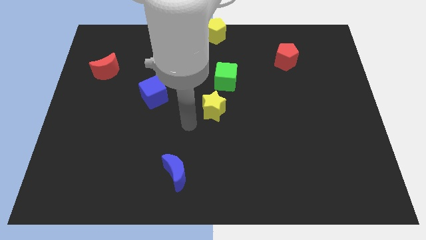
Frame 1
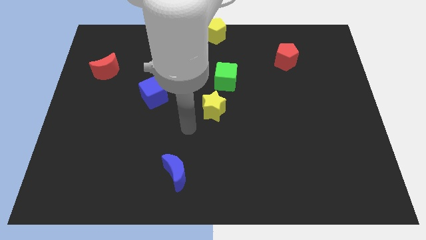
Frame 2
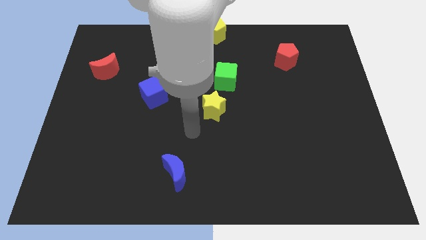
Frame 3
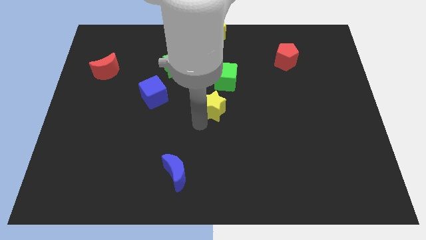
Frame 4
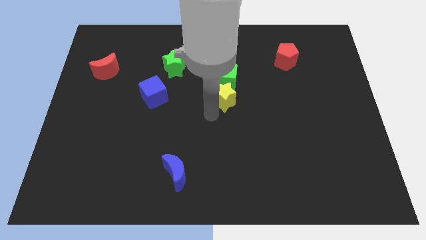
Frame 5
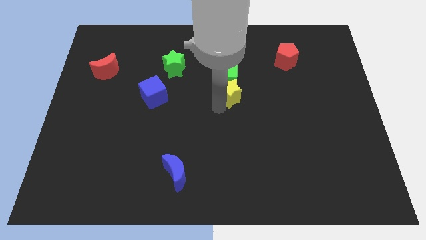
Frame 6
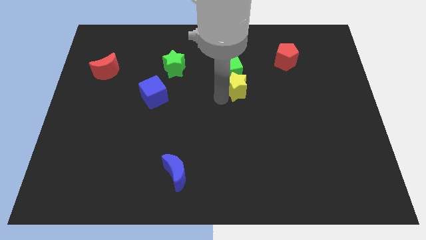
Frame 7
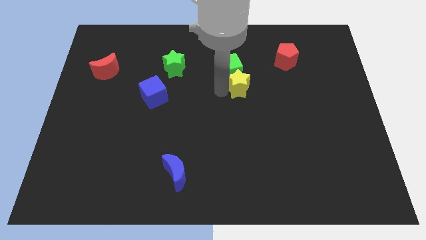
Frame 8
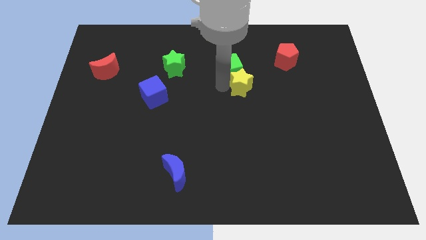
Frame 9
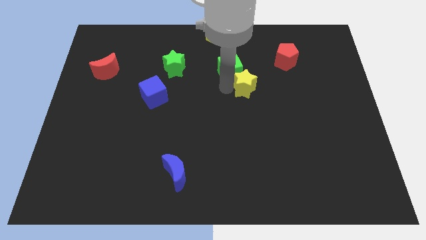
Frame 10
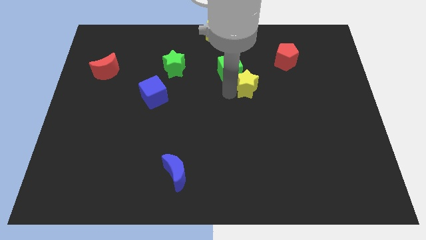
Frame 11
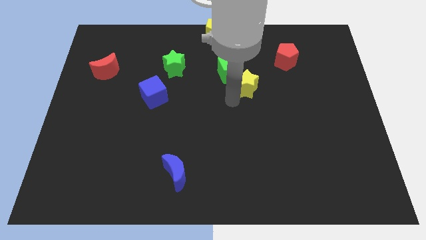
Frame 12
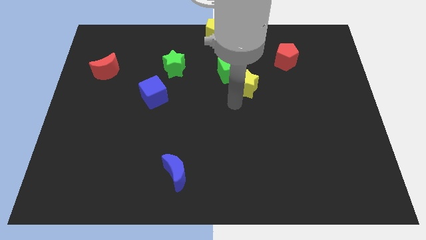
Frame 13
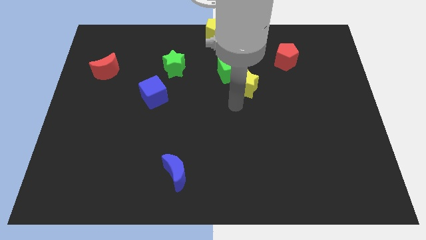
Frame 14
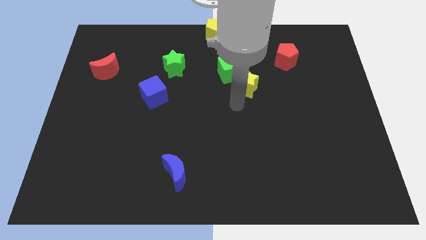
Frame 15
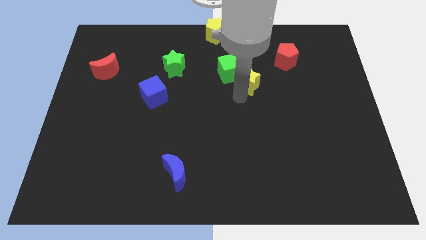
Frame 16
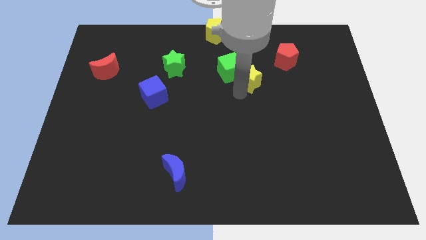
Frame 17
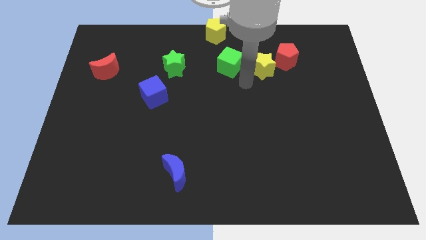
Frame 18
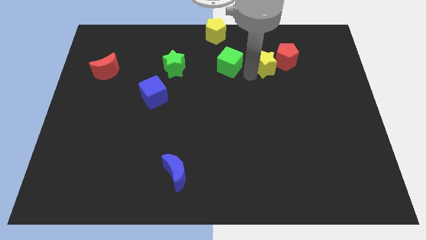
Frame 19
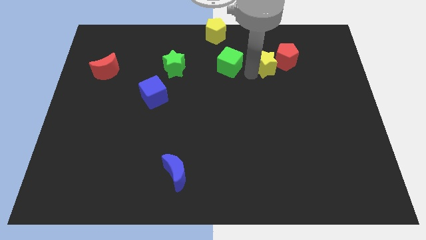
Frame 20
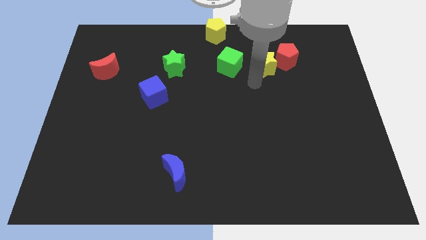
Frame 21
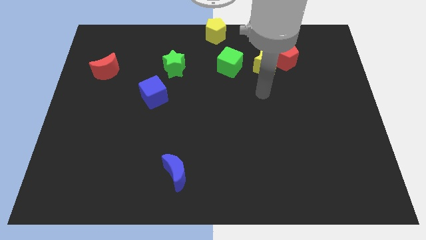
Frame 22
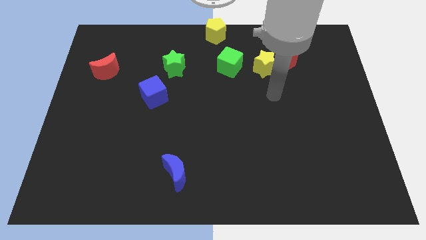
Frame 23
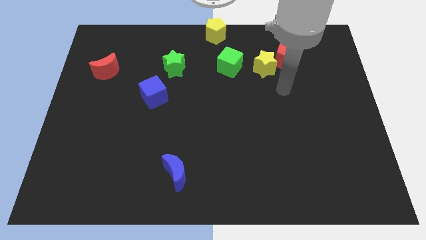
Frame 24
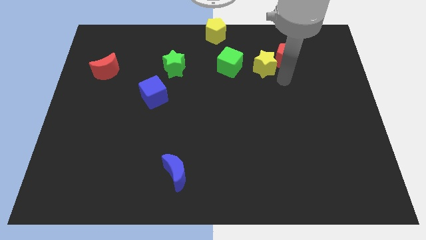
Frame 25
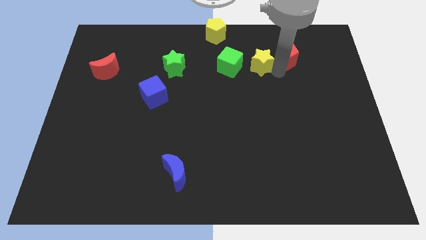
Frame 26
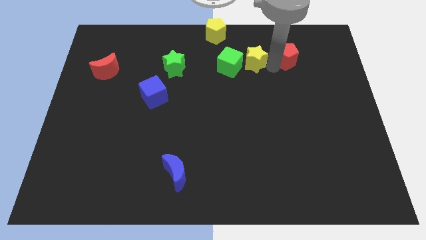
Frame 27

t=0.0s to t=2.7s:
move the yellow star to the right of the green cube

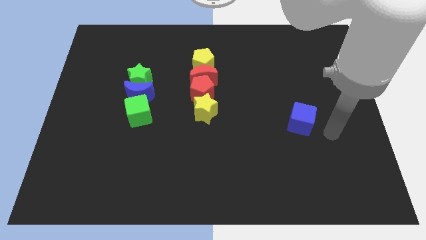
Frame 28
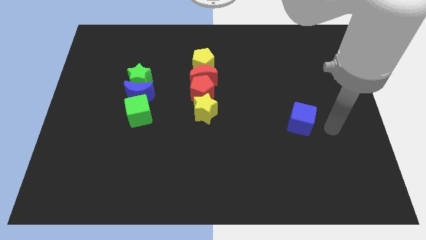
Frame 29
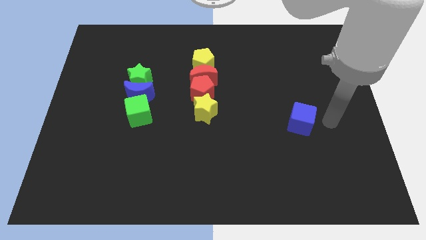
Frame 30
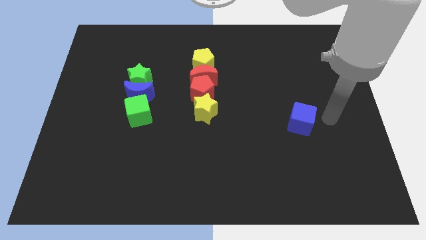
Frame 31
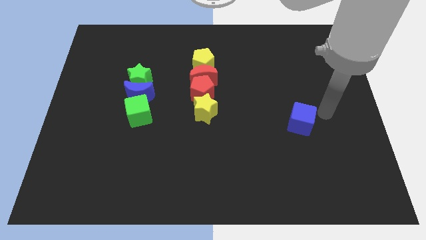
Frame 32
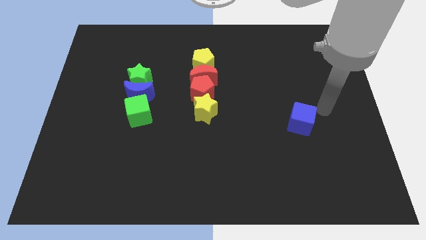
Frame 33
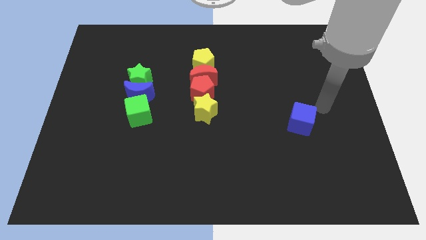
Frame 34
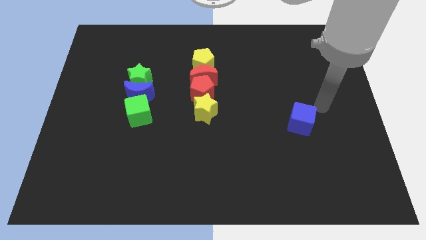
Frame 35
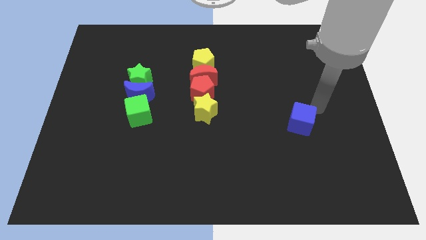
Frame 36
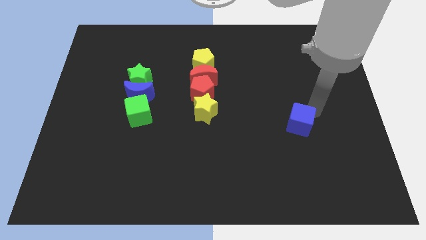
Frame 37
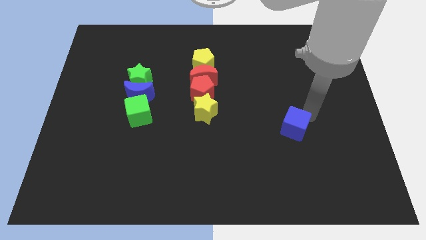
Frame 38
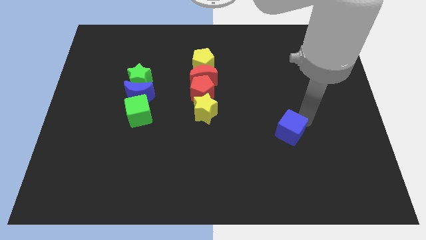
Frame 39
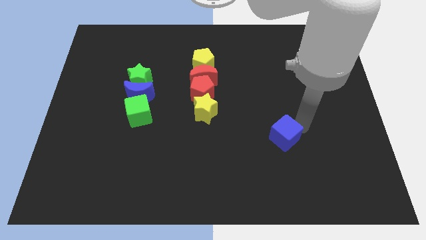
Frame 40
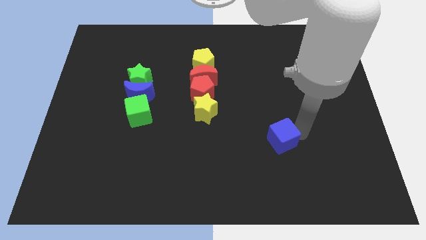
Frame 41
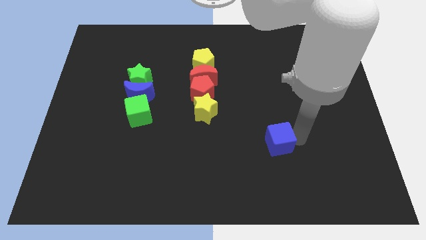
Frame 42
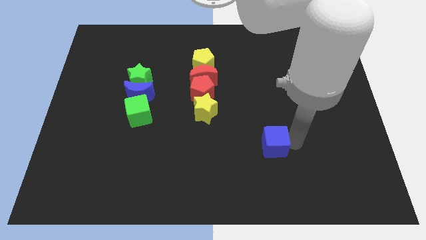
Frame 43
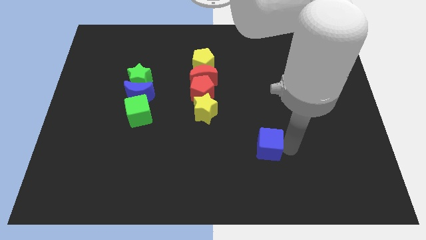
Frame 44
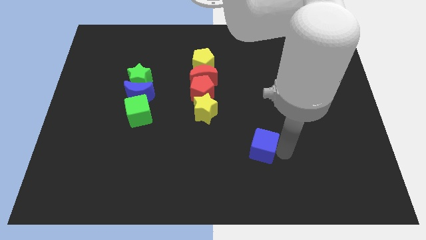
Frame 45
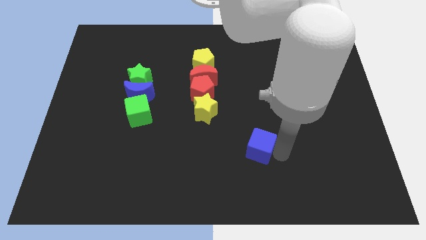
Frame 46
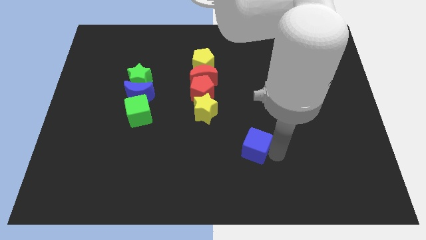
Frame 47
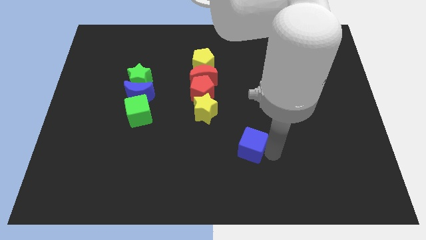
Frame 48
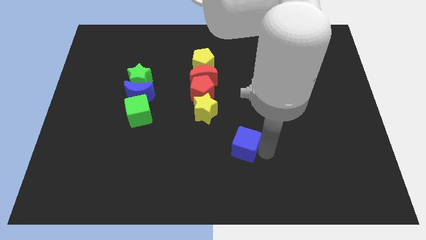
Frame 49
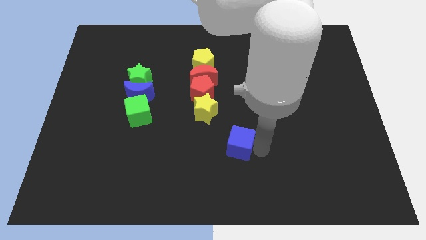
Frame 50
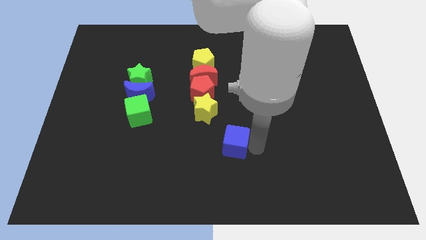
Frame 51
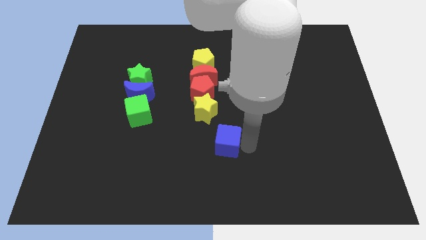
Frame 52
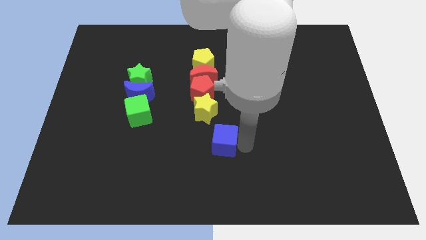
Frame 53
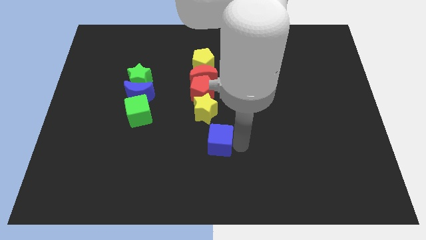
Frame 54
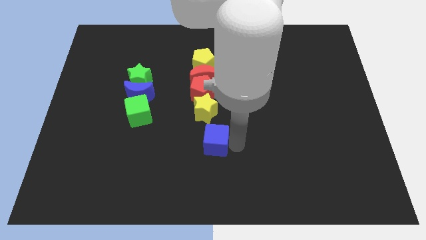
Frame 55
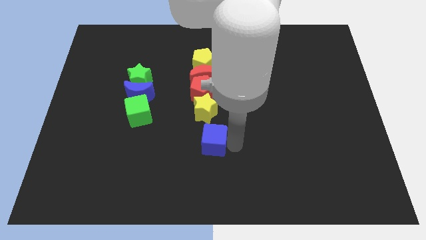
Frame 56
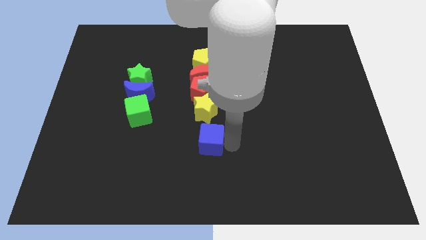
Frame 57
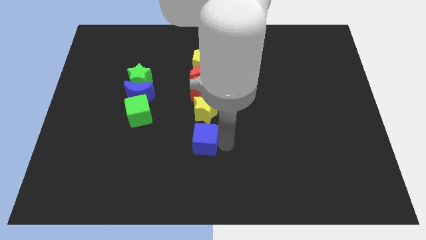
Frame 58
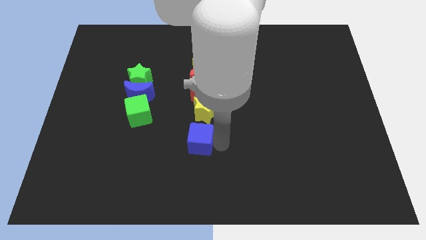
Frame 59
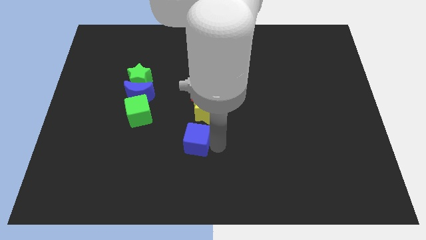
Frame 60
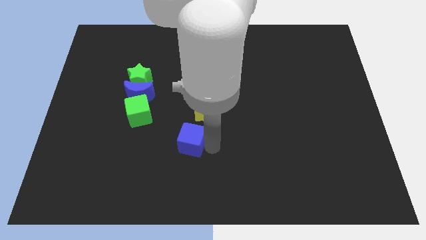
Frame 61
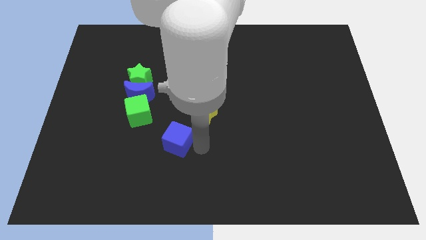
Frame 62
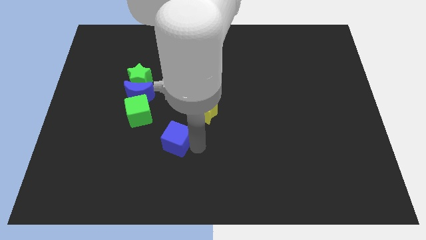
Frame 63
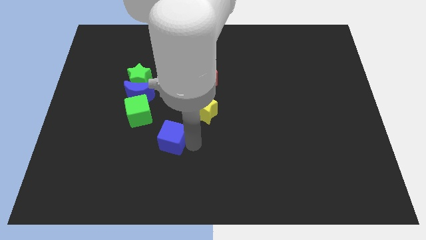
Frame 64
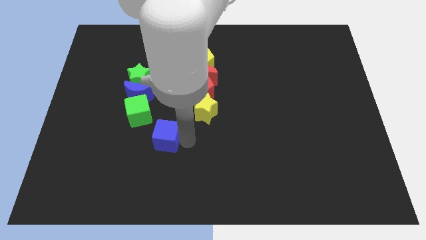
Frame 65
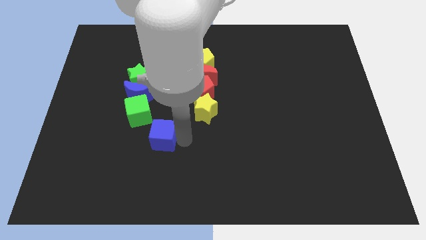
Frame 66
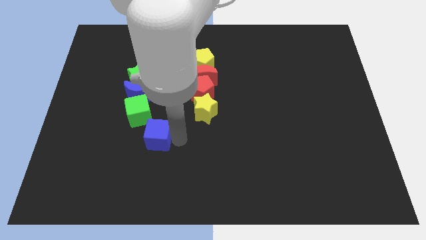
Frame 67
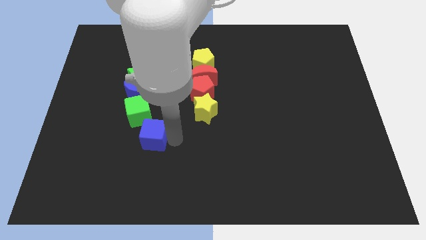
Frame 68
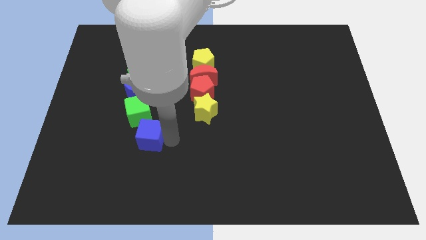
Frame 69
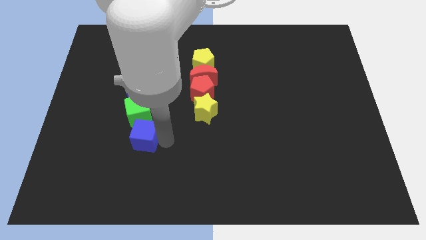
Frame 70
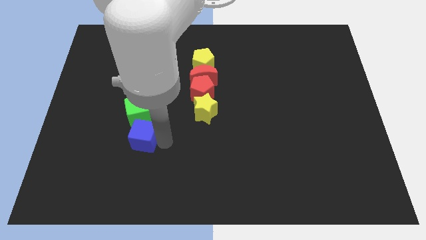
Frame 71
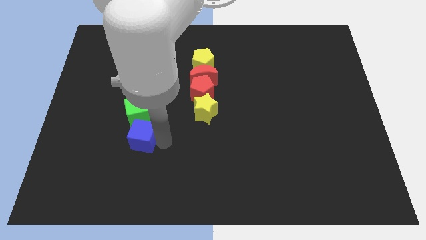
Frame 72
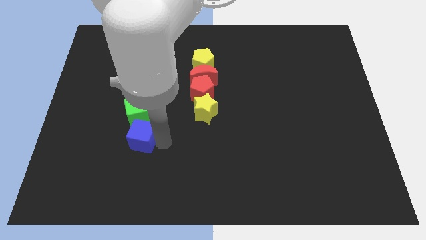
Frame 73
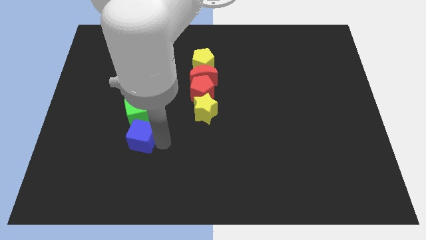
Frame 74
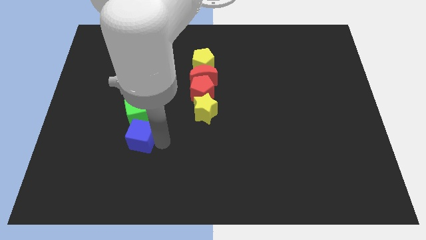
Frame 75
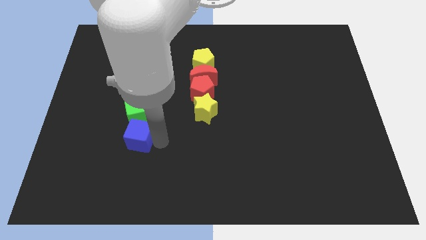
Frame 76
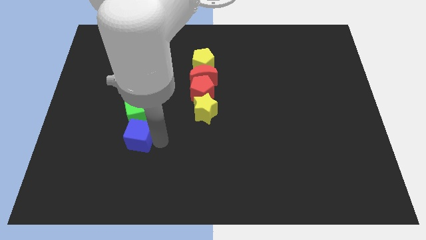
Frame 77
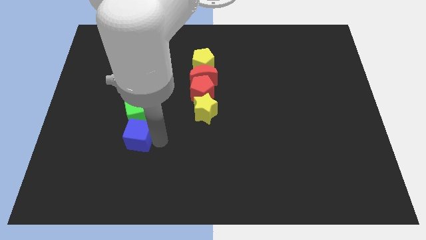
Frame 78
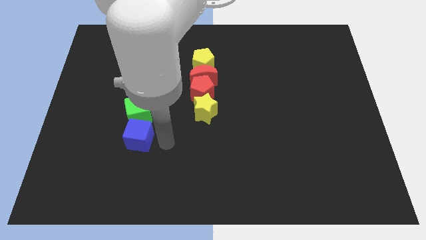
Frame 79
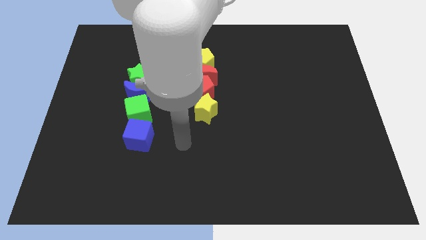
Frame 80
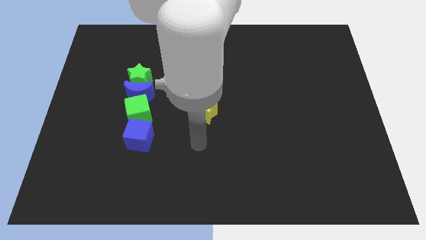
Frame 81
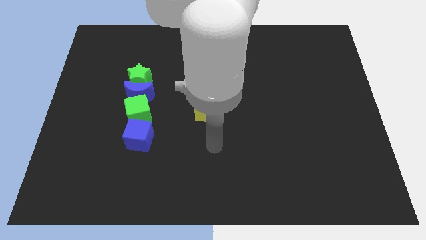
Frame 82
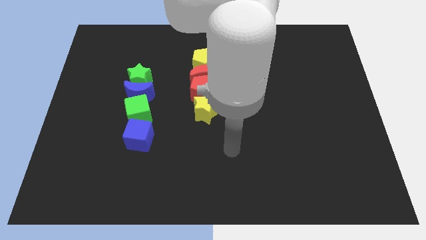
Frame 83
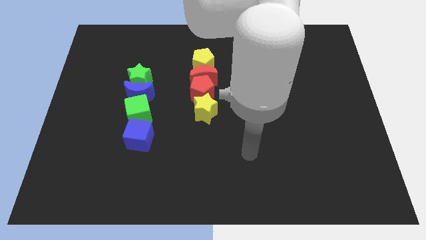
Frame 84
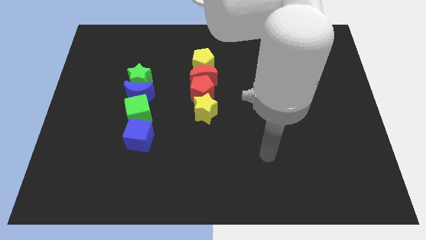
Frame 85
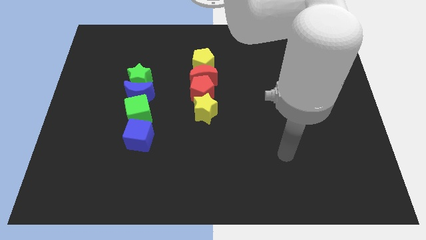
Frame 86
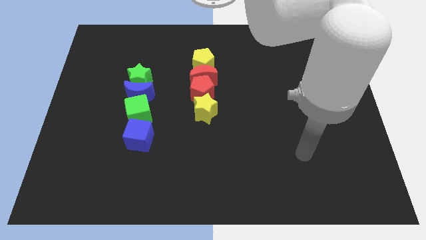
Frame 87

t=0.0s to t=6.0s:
slide blue cube into green cube

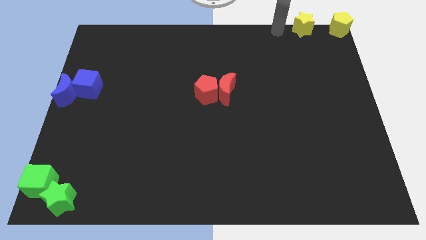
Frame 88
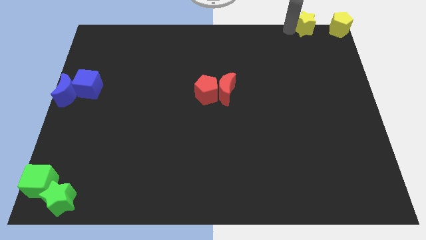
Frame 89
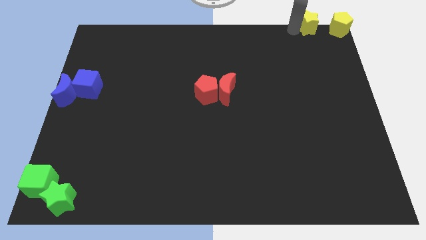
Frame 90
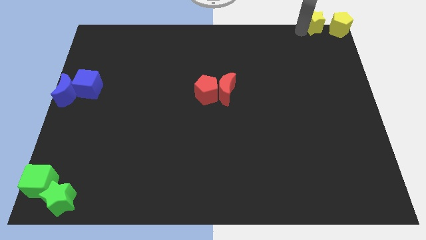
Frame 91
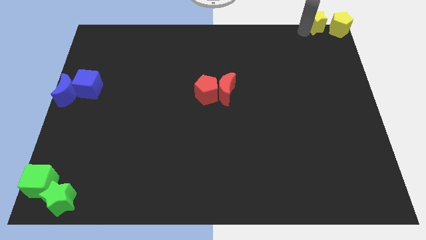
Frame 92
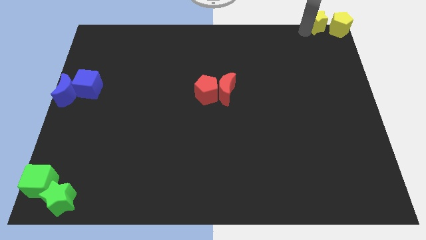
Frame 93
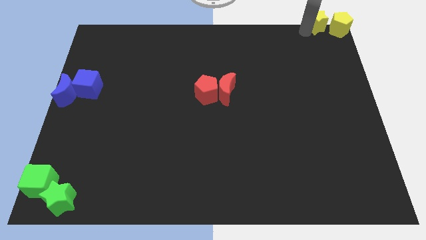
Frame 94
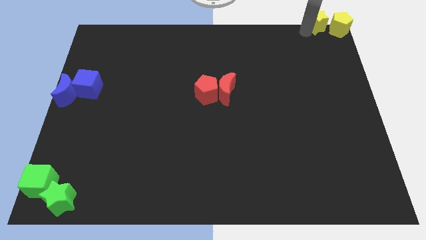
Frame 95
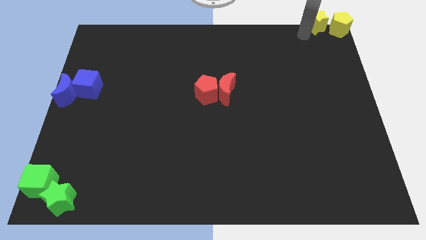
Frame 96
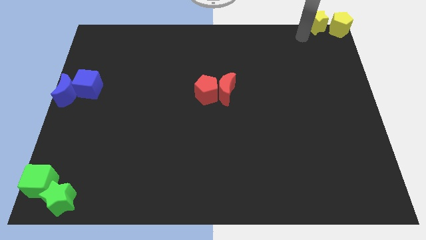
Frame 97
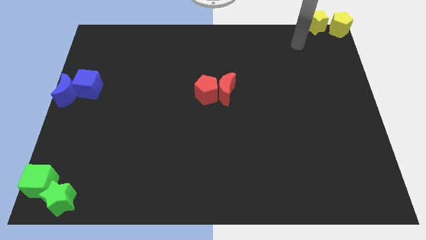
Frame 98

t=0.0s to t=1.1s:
push yellow star to top right corner of the board
